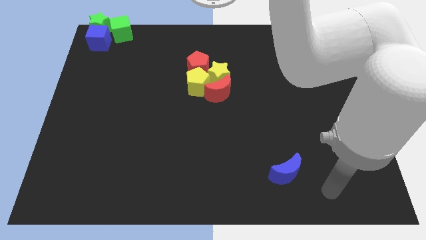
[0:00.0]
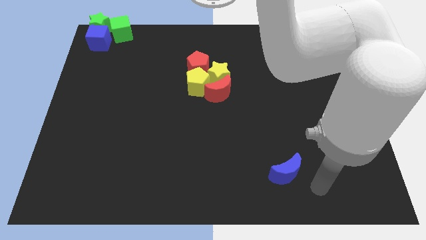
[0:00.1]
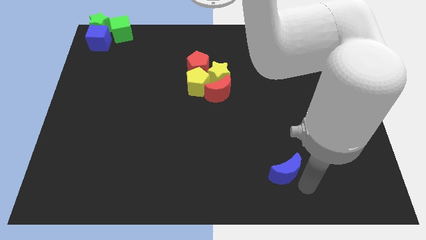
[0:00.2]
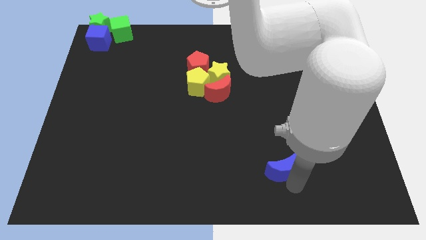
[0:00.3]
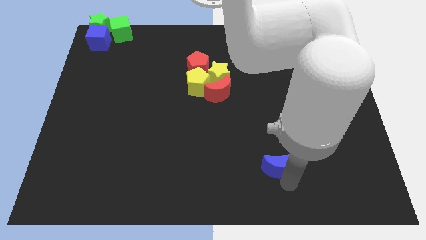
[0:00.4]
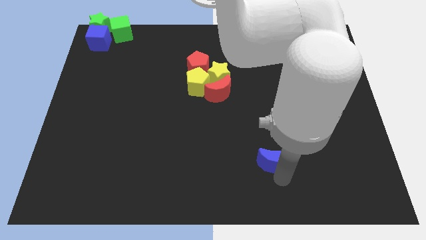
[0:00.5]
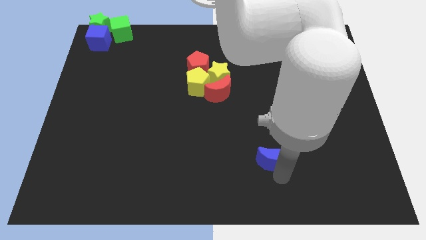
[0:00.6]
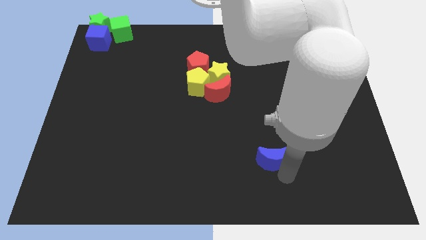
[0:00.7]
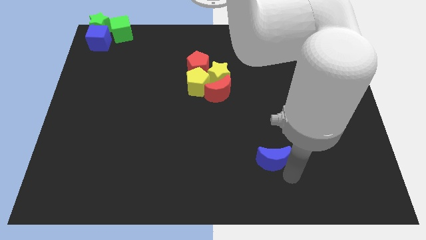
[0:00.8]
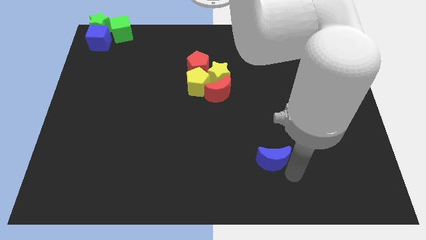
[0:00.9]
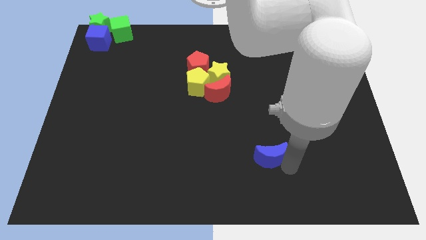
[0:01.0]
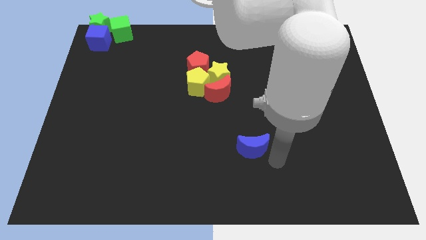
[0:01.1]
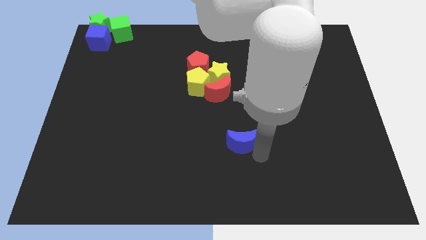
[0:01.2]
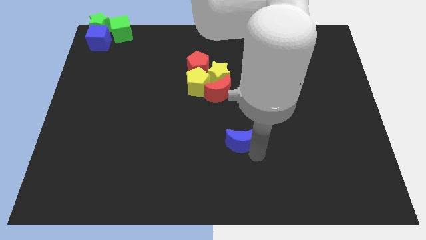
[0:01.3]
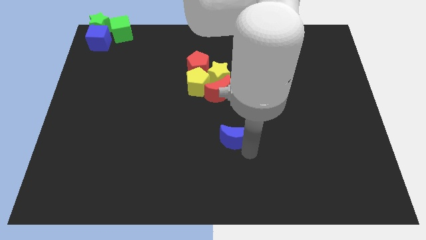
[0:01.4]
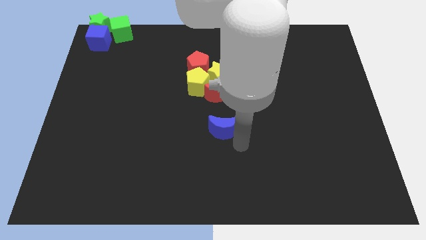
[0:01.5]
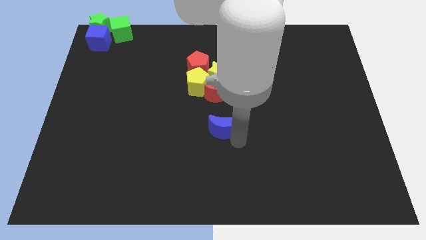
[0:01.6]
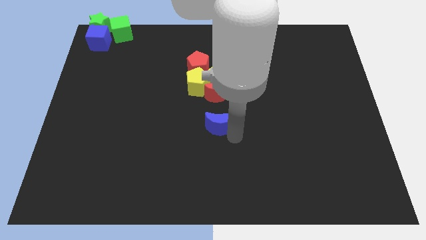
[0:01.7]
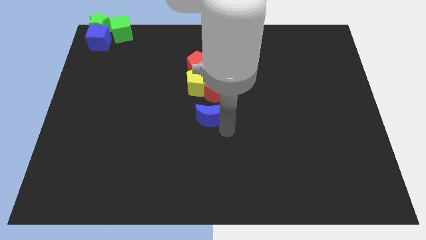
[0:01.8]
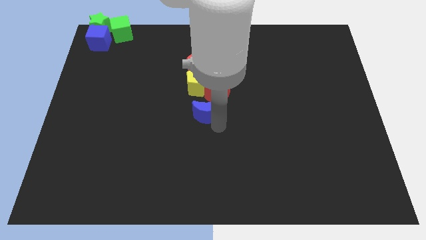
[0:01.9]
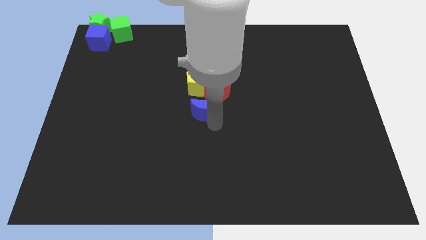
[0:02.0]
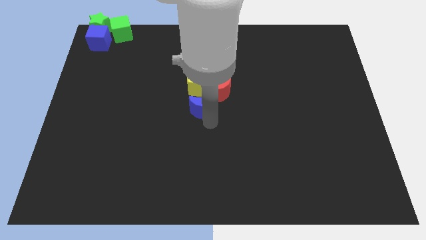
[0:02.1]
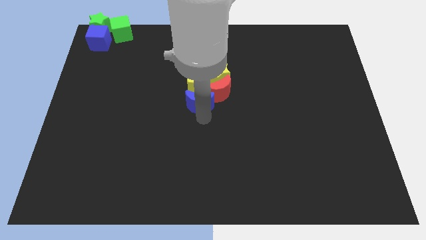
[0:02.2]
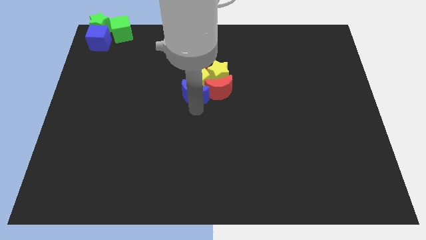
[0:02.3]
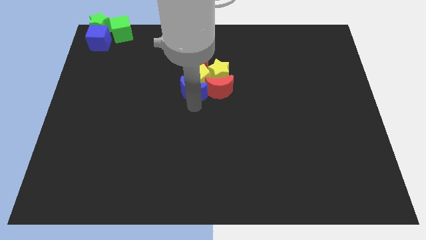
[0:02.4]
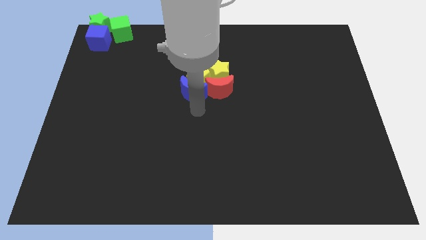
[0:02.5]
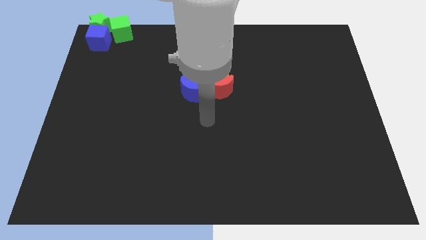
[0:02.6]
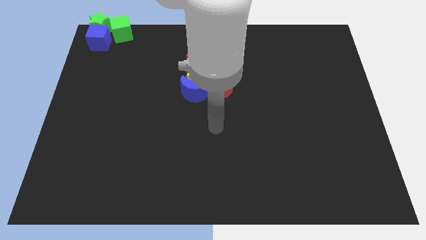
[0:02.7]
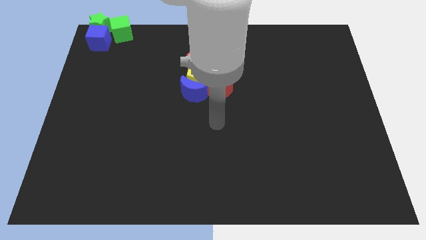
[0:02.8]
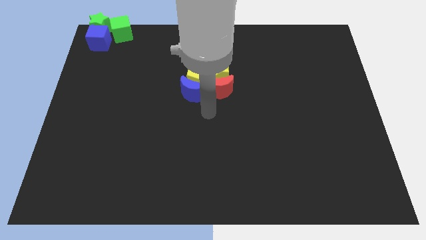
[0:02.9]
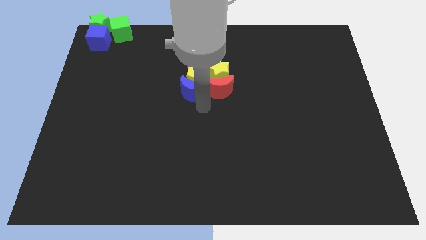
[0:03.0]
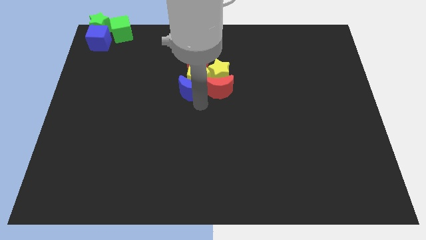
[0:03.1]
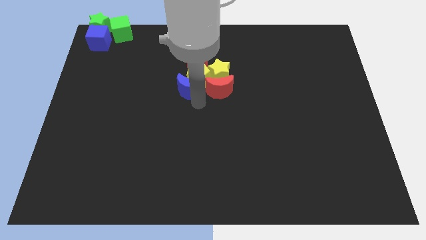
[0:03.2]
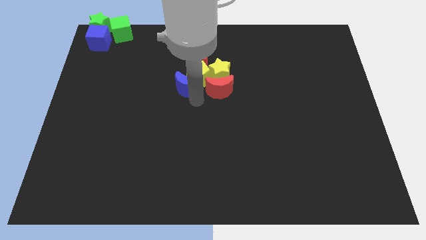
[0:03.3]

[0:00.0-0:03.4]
place the blue moon at the left side of the red moon

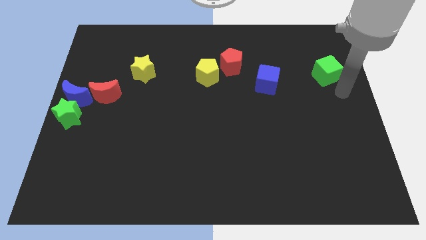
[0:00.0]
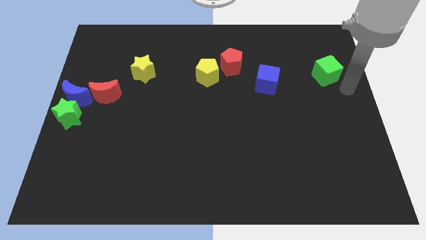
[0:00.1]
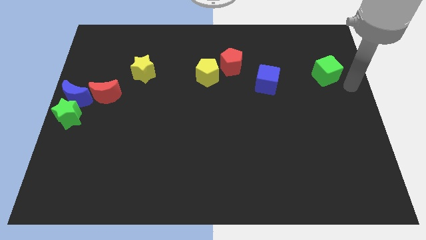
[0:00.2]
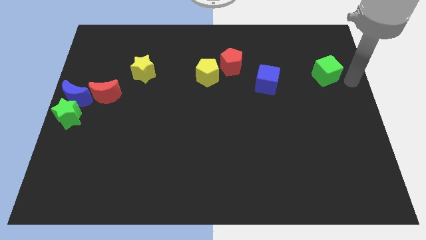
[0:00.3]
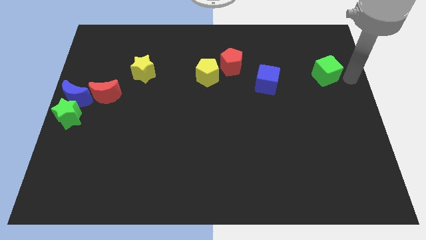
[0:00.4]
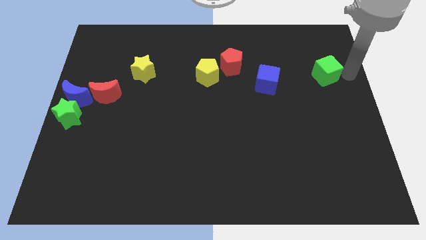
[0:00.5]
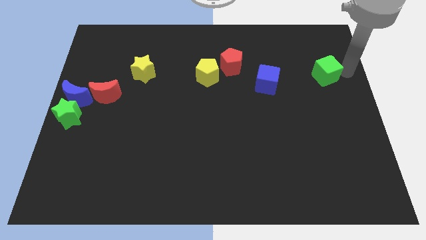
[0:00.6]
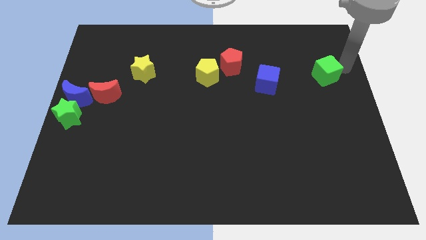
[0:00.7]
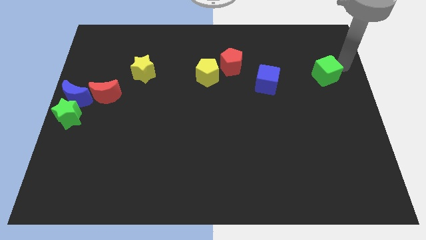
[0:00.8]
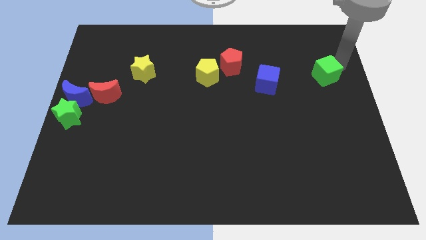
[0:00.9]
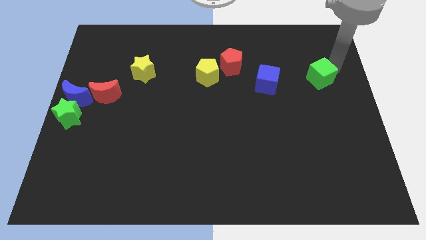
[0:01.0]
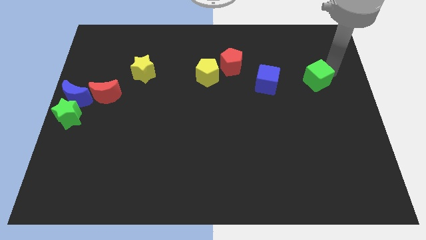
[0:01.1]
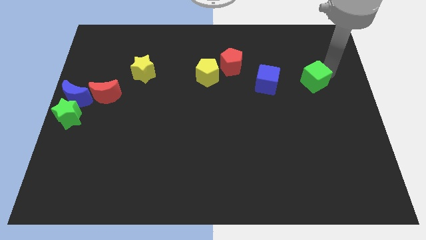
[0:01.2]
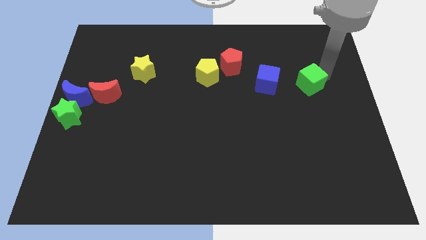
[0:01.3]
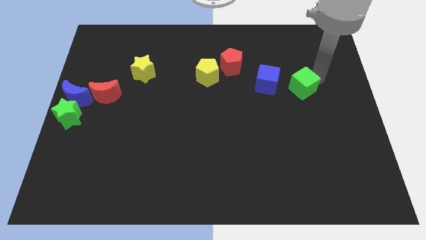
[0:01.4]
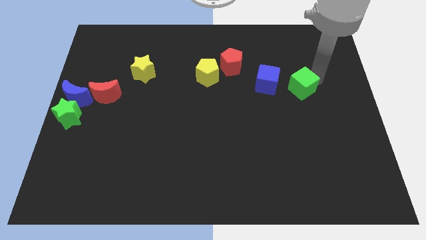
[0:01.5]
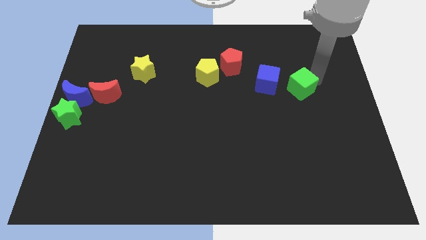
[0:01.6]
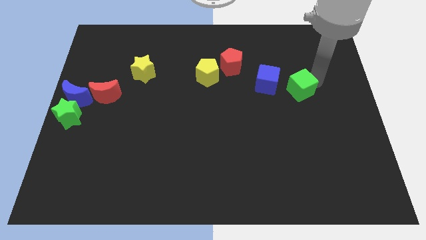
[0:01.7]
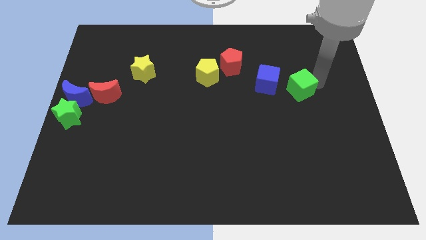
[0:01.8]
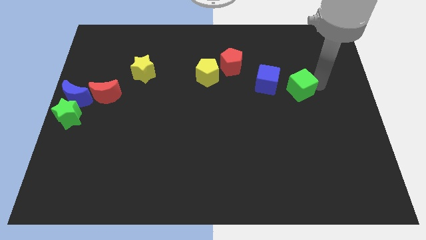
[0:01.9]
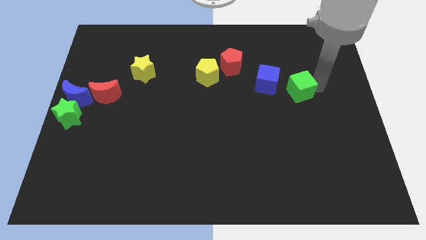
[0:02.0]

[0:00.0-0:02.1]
slide the green cube to the right of the blue cube

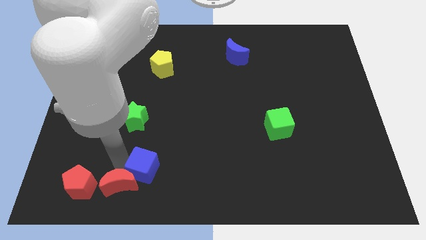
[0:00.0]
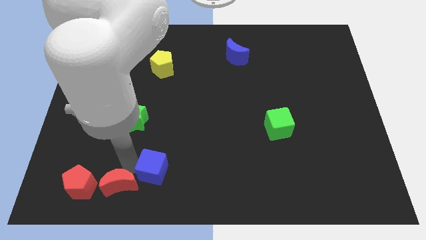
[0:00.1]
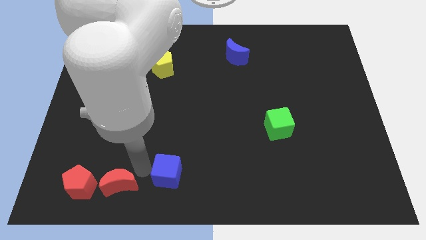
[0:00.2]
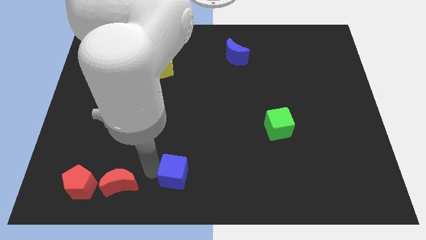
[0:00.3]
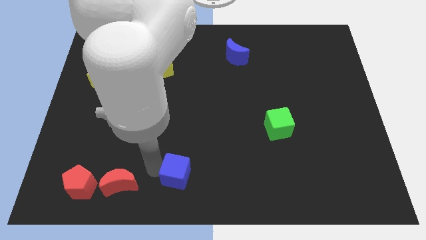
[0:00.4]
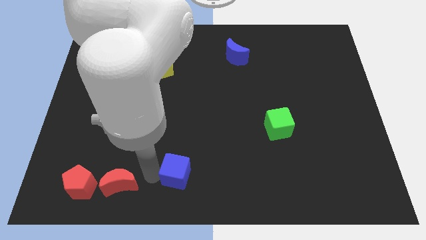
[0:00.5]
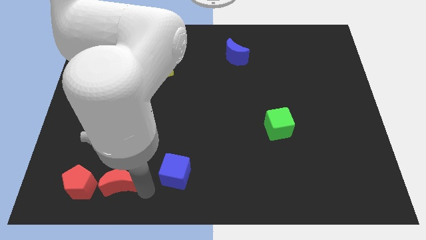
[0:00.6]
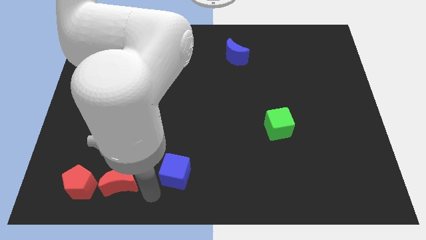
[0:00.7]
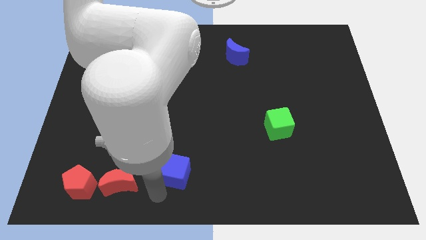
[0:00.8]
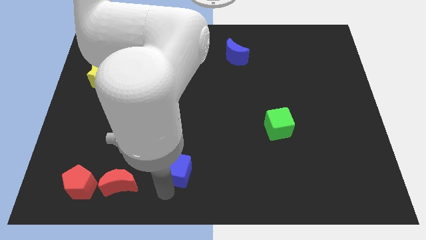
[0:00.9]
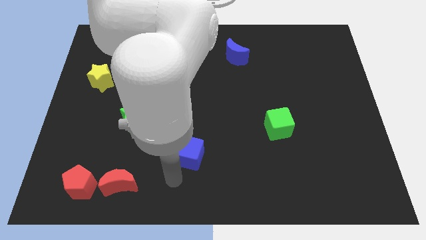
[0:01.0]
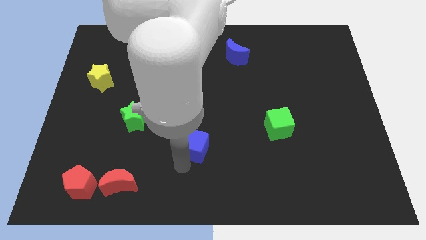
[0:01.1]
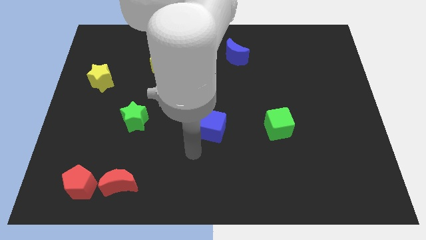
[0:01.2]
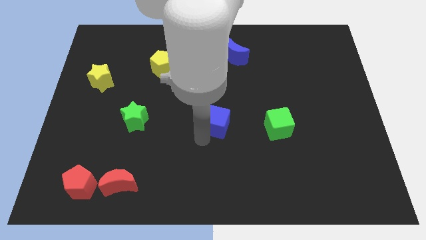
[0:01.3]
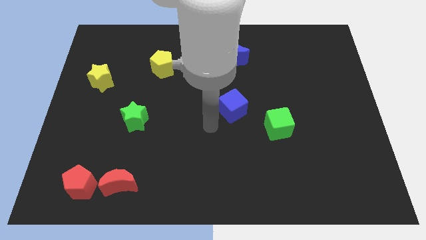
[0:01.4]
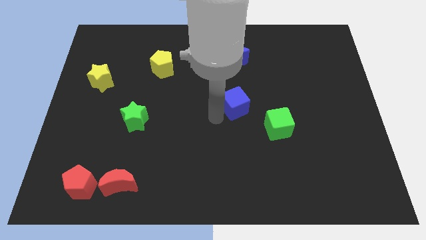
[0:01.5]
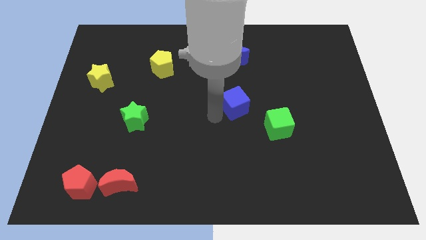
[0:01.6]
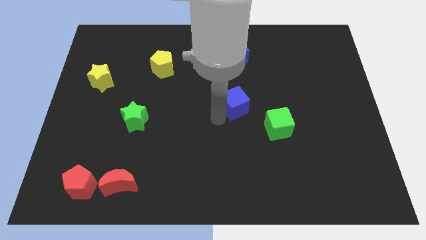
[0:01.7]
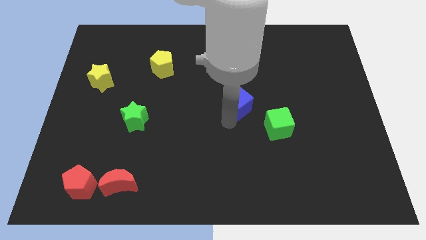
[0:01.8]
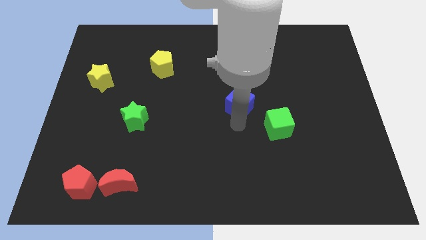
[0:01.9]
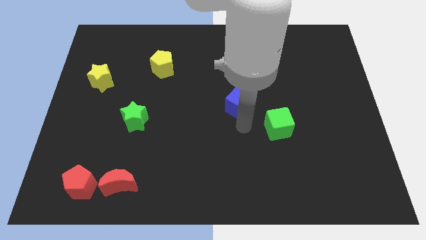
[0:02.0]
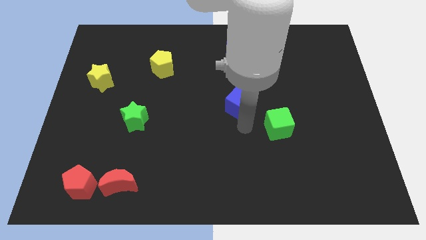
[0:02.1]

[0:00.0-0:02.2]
move the blue cube to the top left of green cube

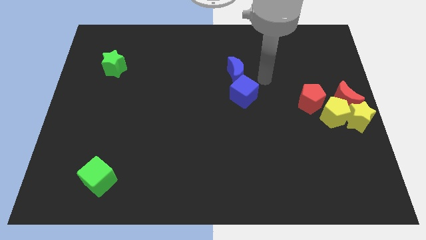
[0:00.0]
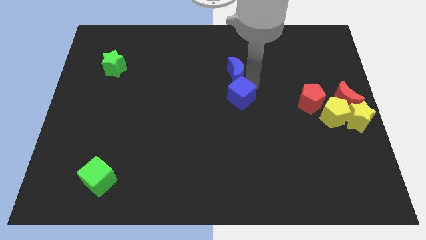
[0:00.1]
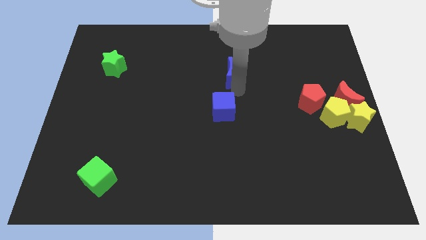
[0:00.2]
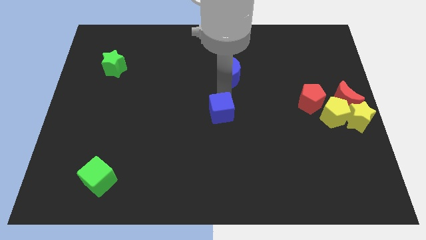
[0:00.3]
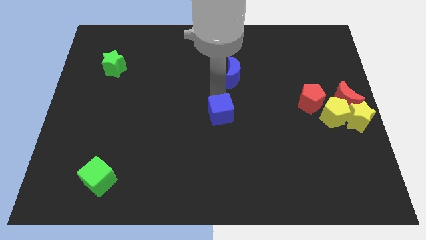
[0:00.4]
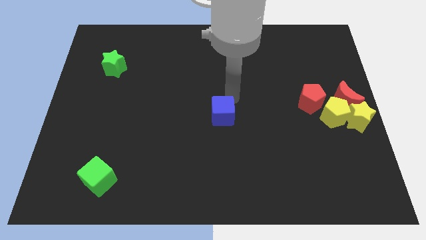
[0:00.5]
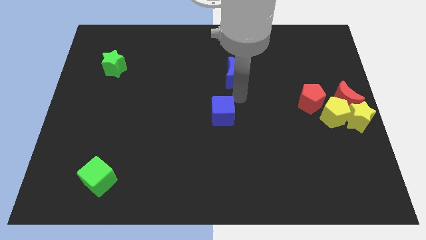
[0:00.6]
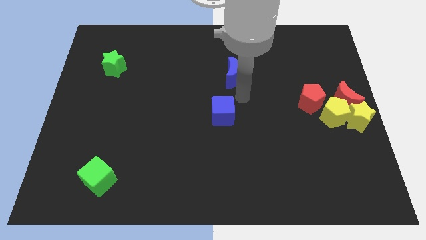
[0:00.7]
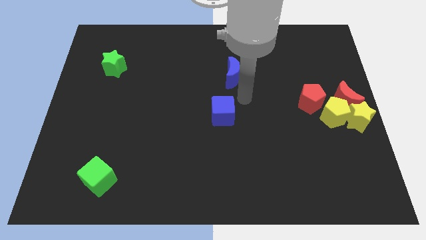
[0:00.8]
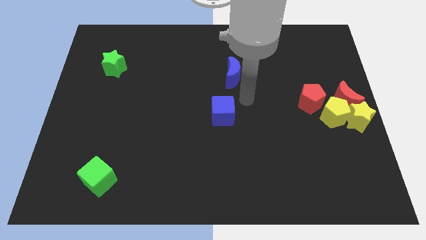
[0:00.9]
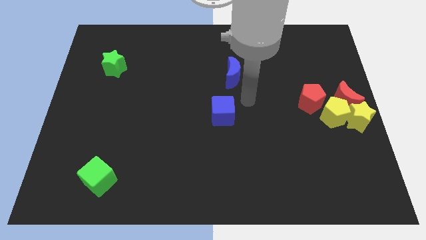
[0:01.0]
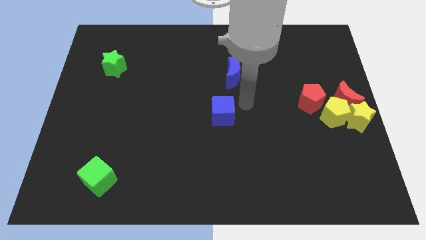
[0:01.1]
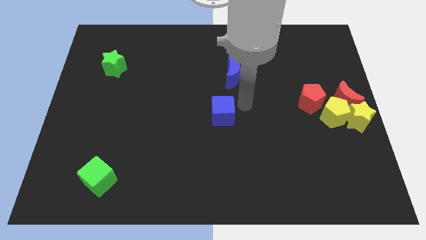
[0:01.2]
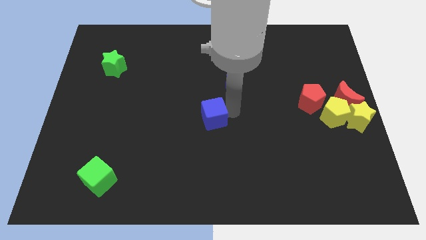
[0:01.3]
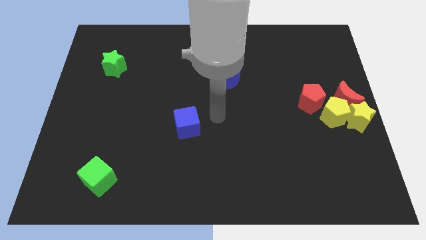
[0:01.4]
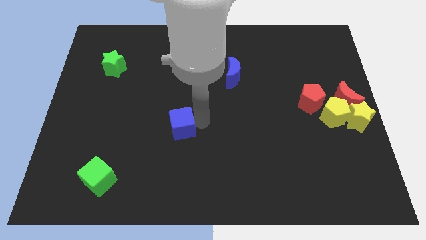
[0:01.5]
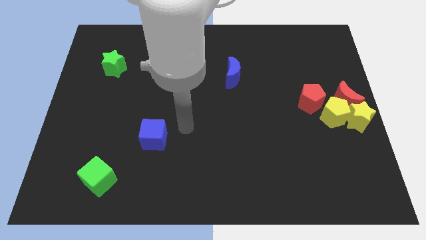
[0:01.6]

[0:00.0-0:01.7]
push the blue cube to the top right of the green cube
